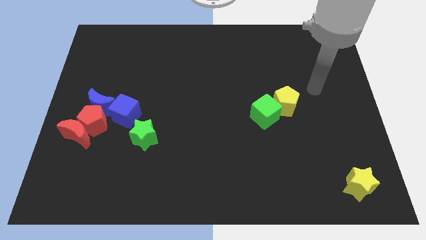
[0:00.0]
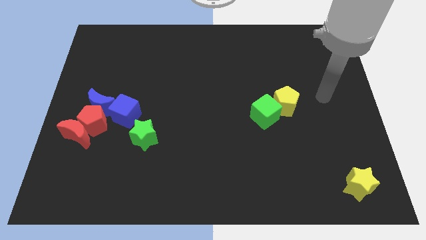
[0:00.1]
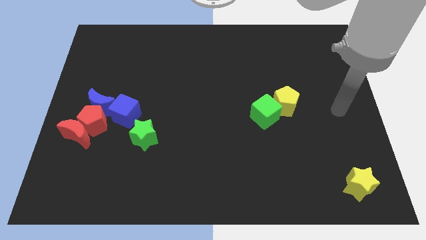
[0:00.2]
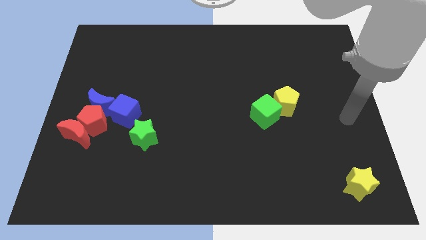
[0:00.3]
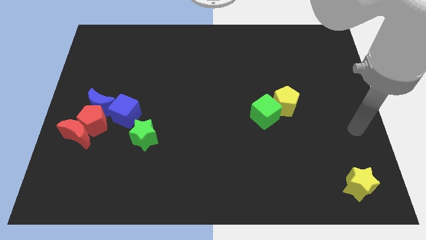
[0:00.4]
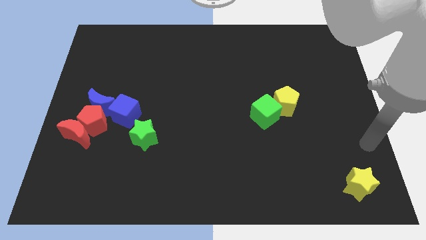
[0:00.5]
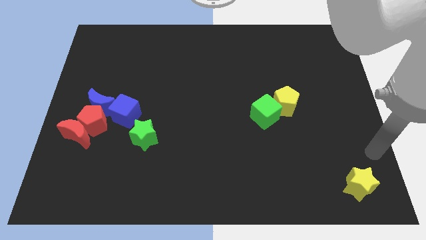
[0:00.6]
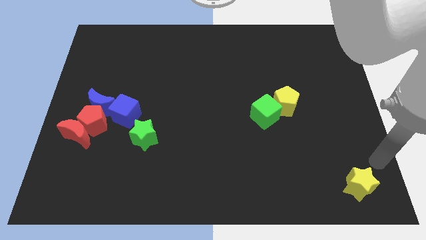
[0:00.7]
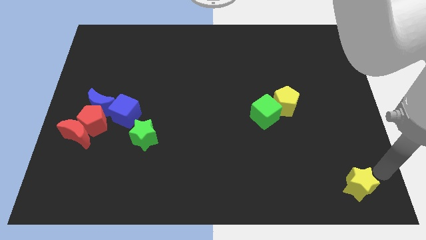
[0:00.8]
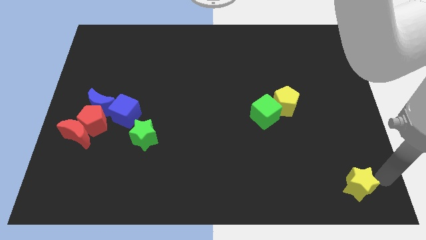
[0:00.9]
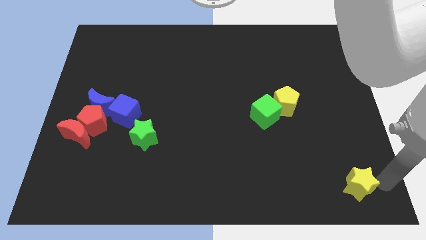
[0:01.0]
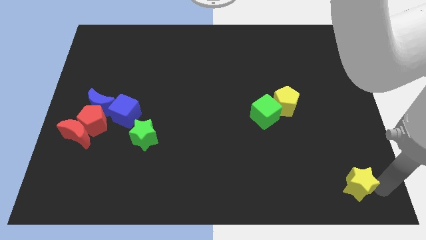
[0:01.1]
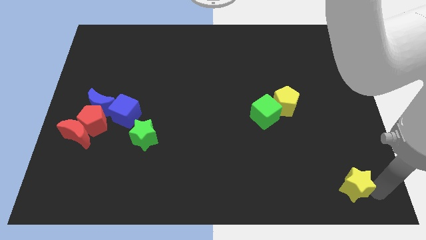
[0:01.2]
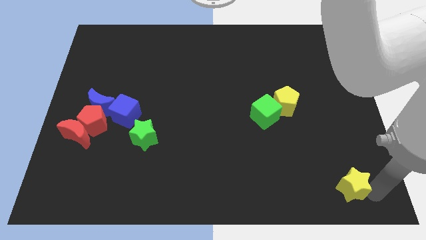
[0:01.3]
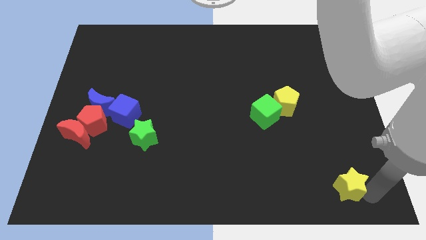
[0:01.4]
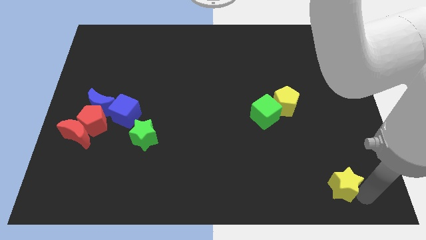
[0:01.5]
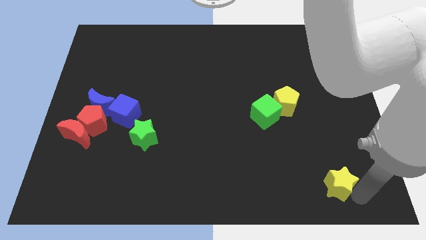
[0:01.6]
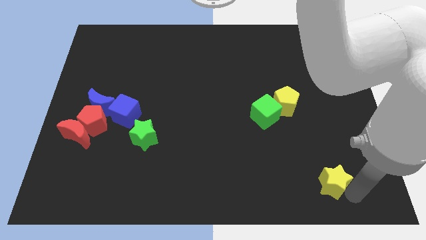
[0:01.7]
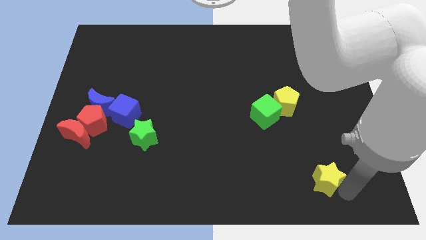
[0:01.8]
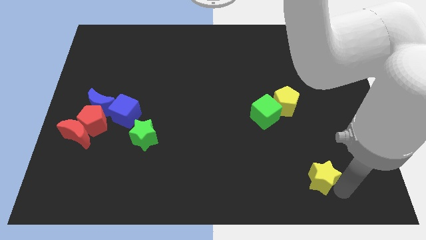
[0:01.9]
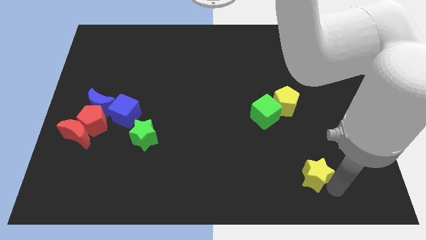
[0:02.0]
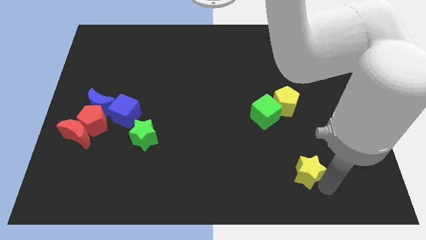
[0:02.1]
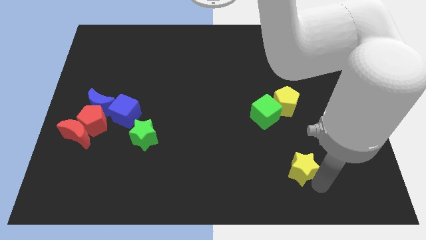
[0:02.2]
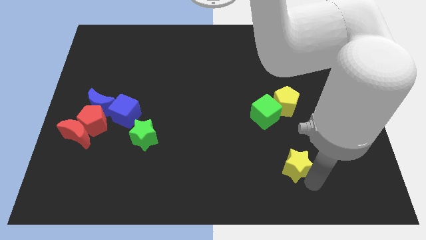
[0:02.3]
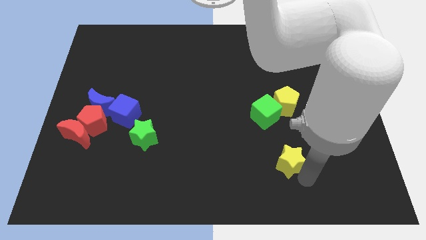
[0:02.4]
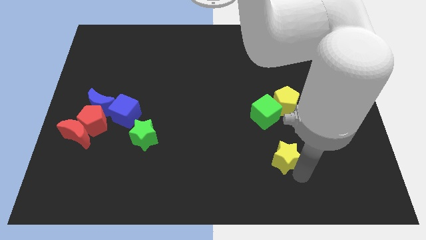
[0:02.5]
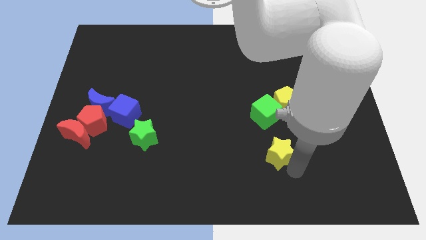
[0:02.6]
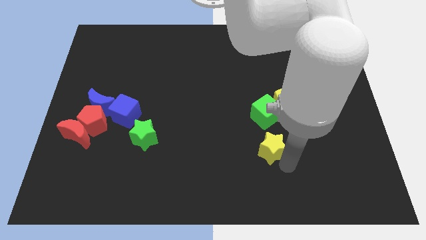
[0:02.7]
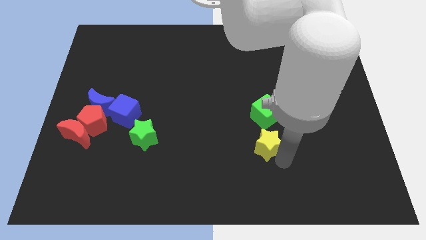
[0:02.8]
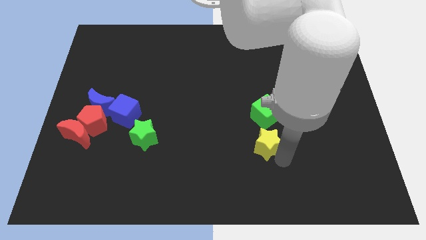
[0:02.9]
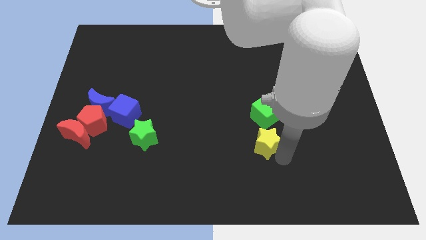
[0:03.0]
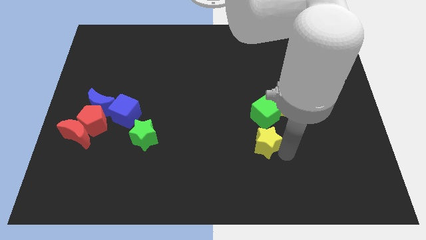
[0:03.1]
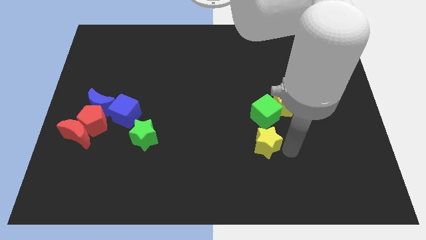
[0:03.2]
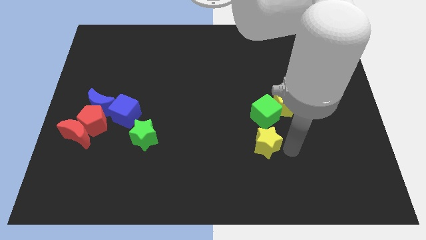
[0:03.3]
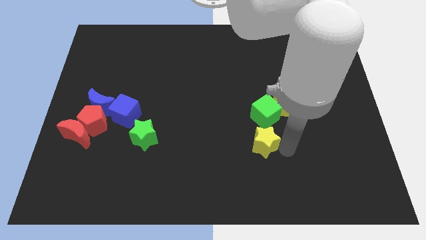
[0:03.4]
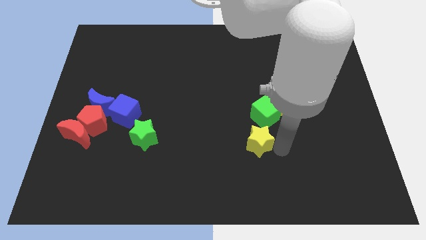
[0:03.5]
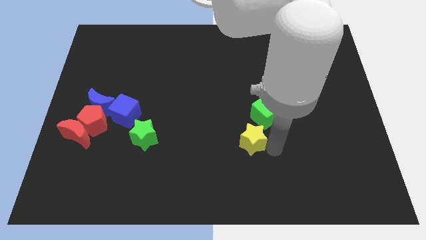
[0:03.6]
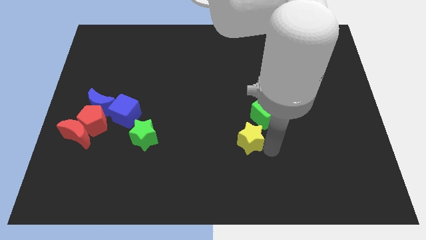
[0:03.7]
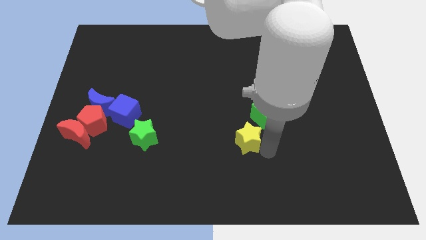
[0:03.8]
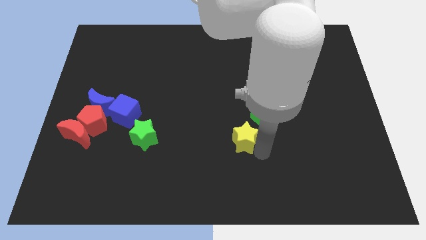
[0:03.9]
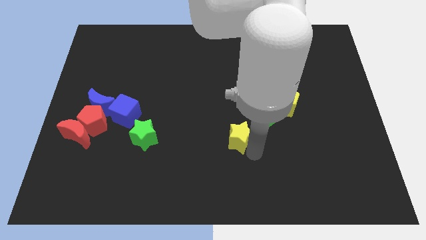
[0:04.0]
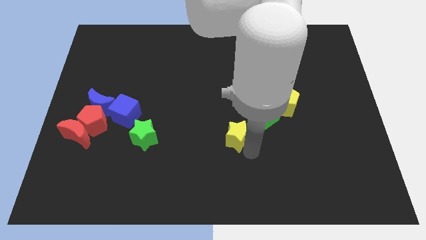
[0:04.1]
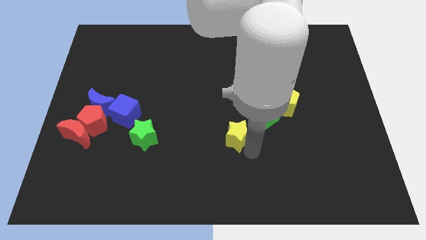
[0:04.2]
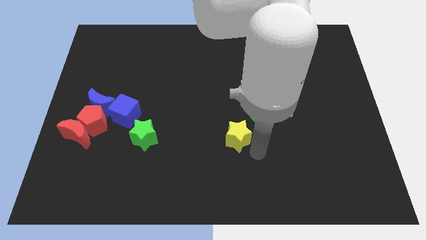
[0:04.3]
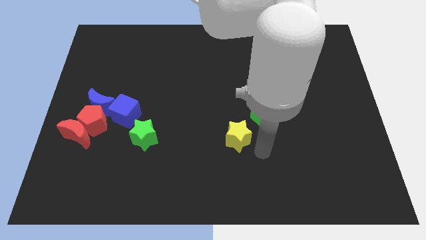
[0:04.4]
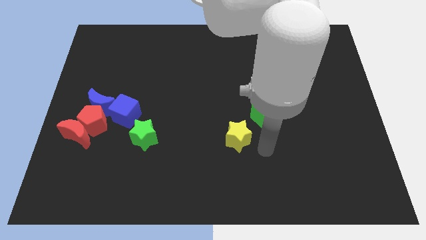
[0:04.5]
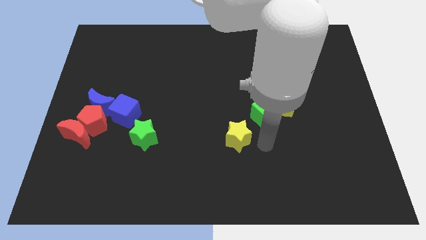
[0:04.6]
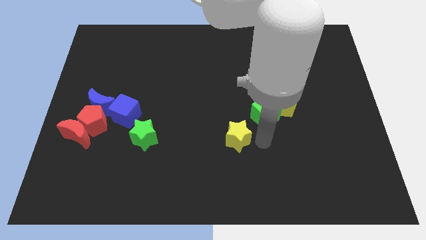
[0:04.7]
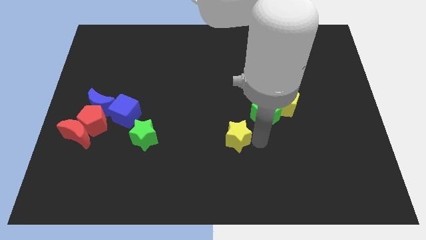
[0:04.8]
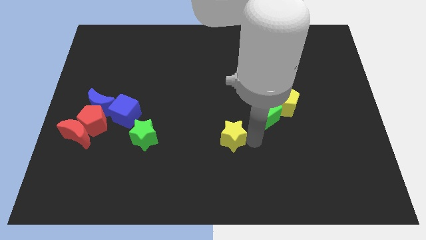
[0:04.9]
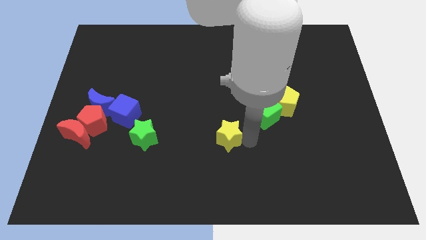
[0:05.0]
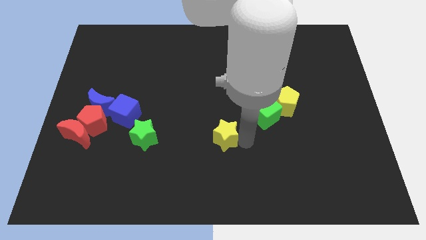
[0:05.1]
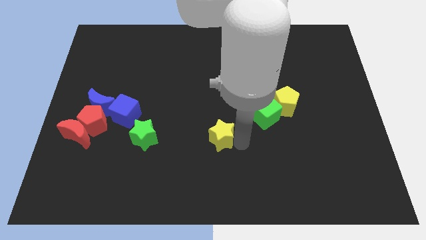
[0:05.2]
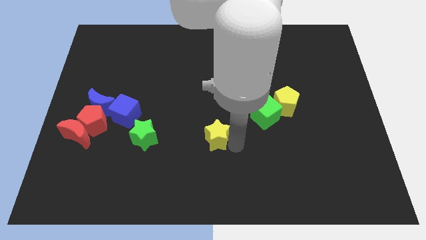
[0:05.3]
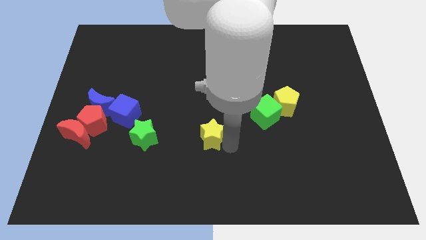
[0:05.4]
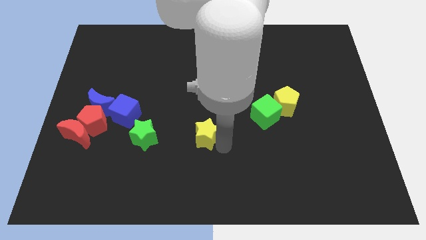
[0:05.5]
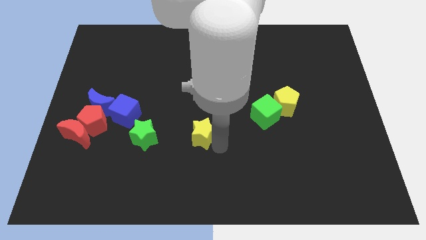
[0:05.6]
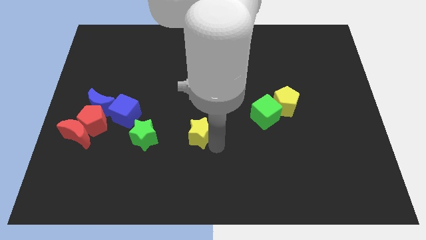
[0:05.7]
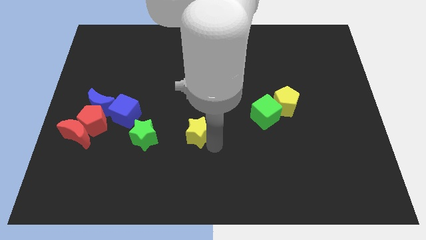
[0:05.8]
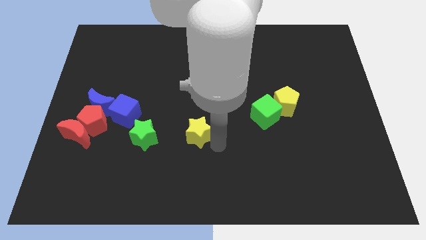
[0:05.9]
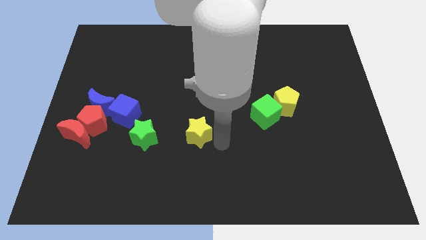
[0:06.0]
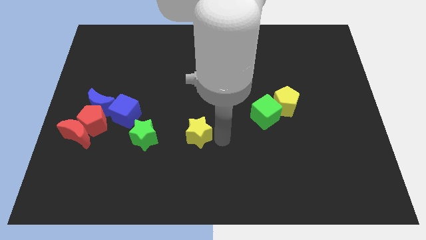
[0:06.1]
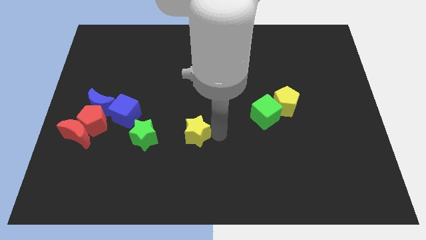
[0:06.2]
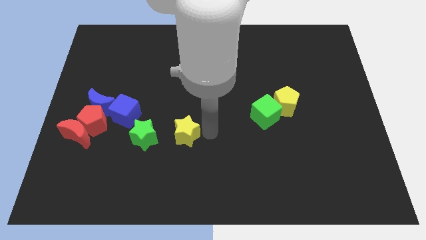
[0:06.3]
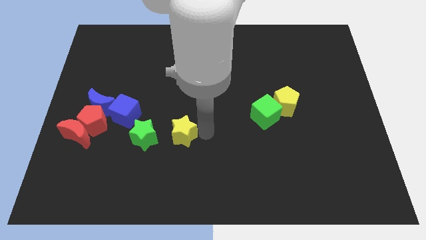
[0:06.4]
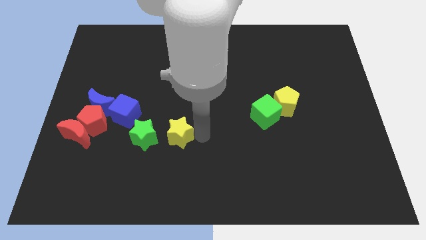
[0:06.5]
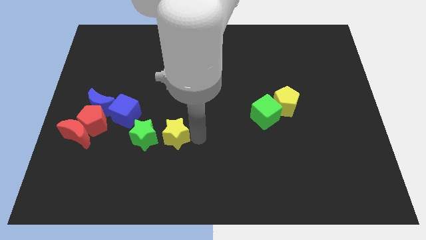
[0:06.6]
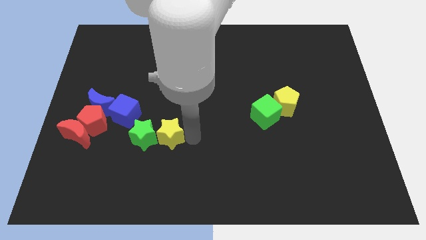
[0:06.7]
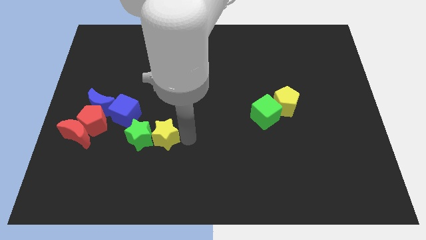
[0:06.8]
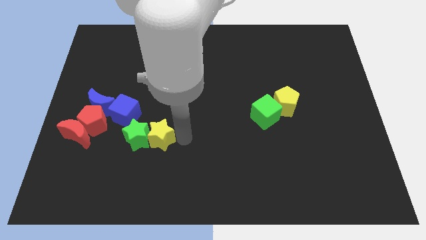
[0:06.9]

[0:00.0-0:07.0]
move the yellow star to the green star

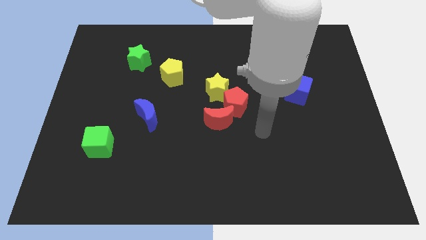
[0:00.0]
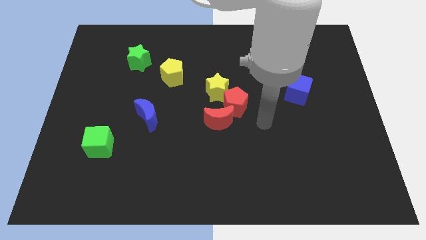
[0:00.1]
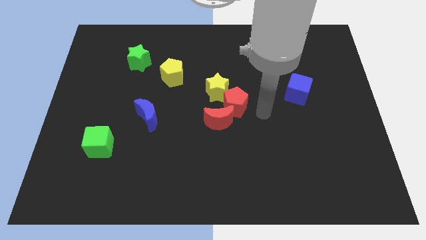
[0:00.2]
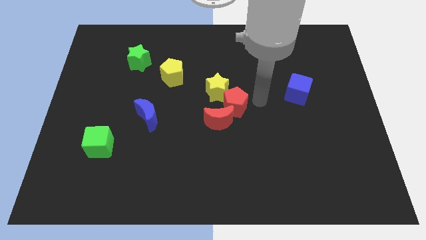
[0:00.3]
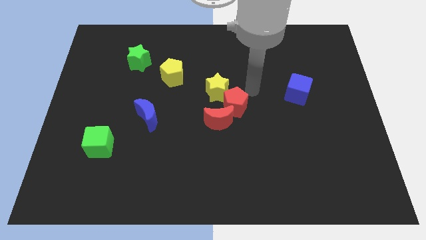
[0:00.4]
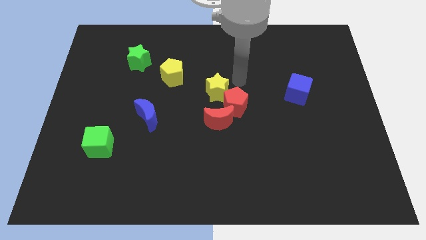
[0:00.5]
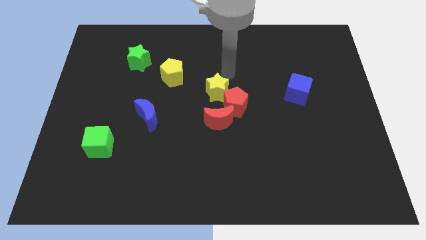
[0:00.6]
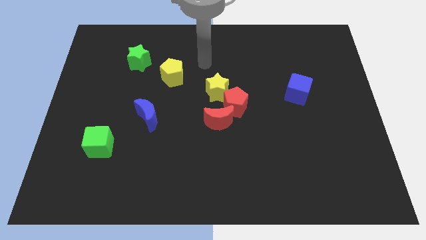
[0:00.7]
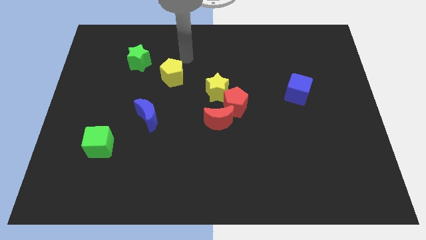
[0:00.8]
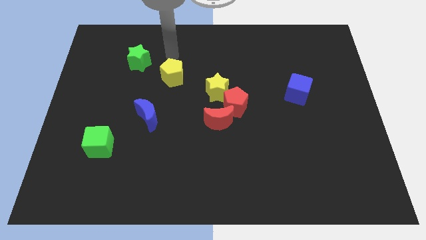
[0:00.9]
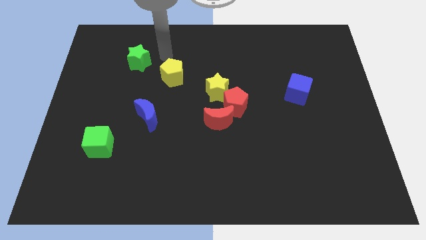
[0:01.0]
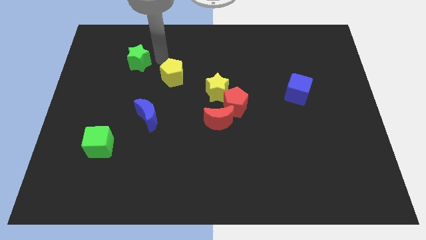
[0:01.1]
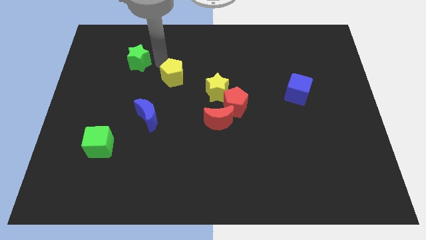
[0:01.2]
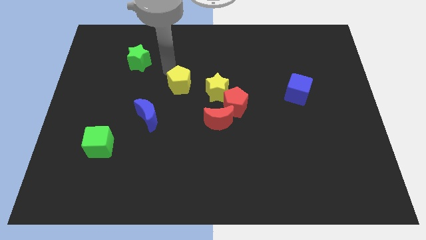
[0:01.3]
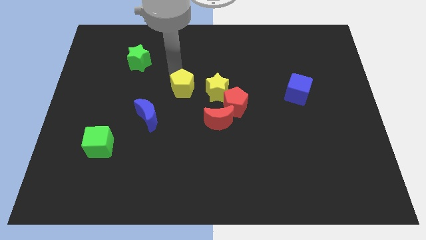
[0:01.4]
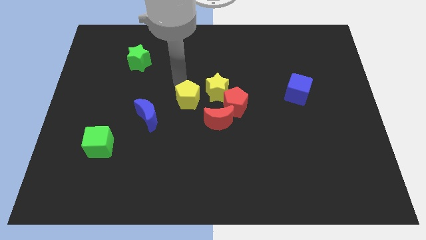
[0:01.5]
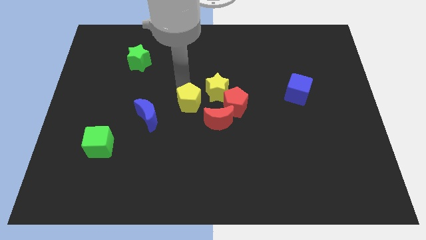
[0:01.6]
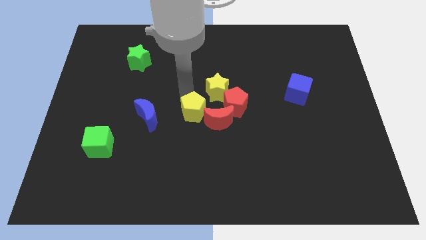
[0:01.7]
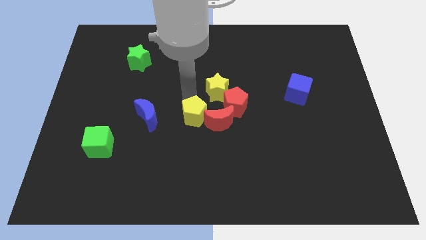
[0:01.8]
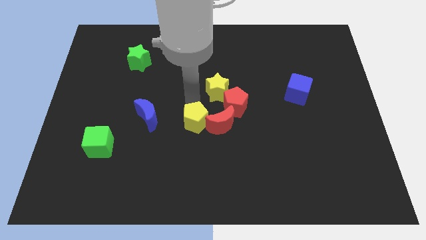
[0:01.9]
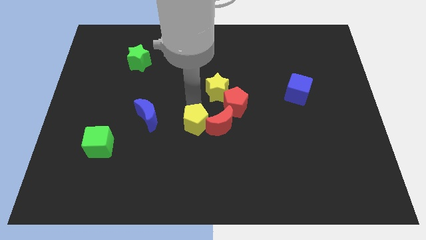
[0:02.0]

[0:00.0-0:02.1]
put the yellow pentagon to the red moon
